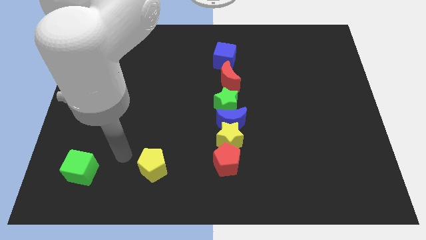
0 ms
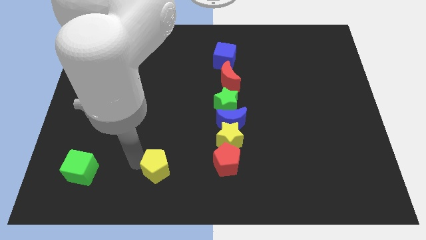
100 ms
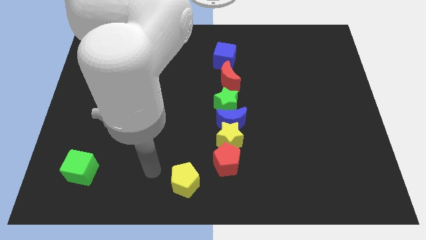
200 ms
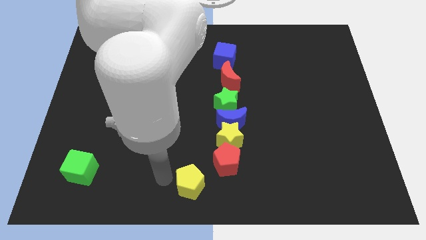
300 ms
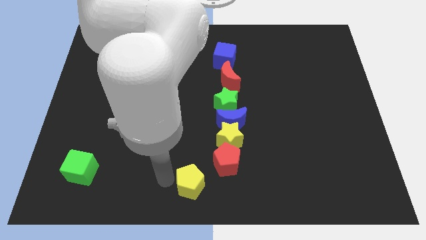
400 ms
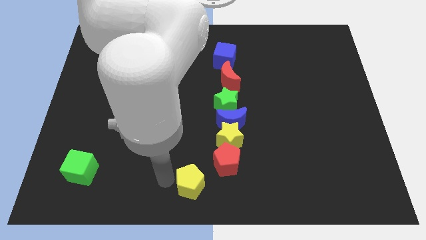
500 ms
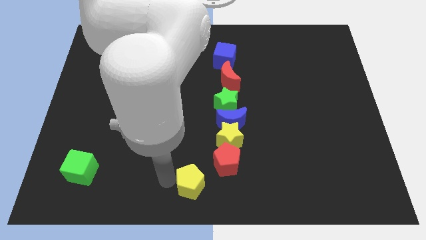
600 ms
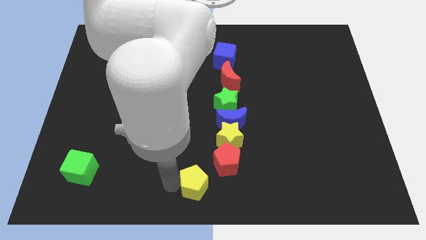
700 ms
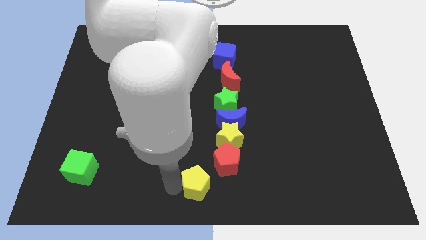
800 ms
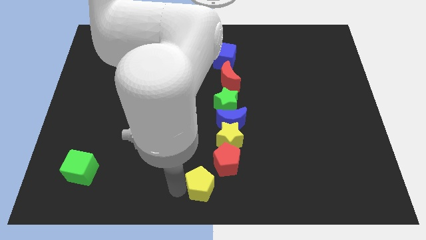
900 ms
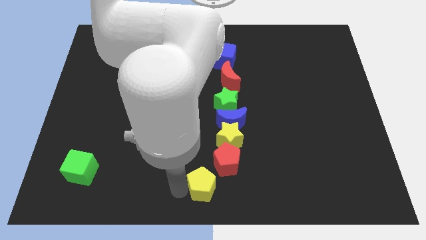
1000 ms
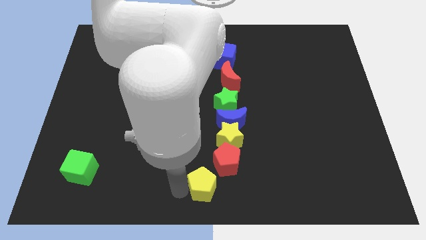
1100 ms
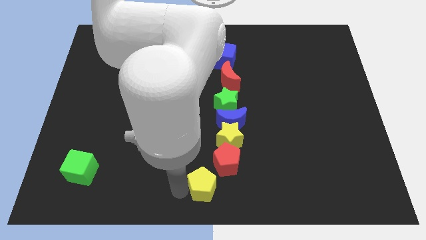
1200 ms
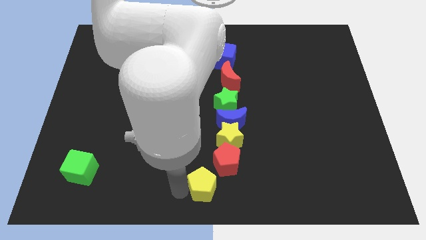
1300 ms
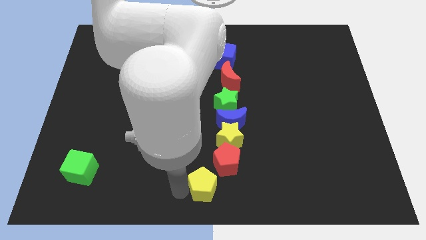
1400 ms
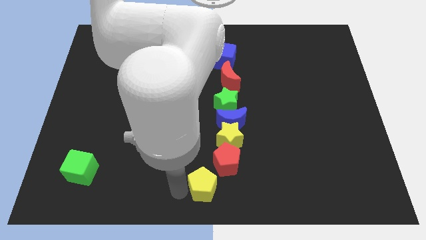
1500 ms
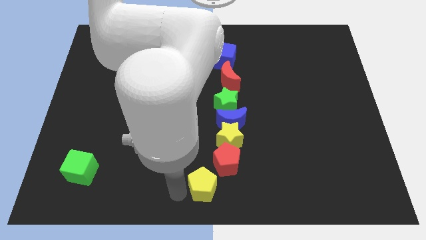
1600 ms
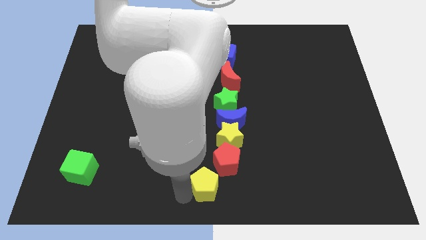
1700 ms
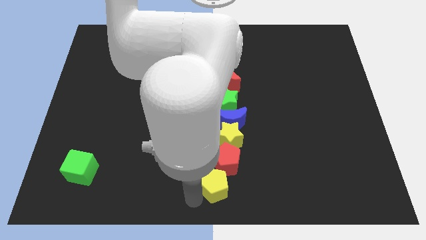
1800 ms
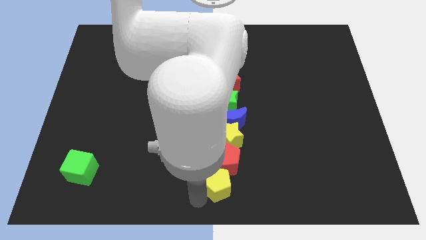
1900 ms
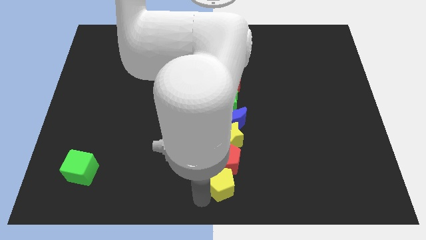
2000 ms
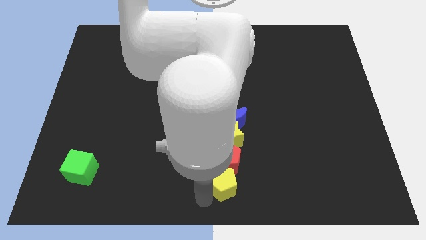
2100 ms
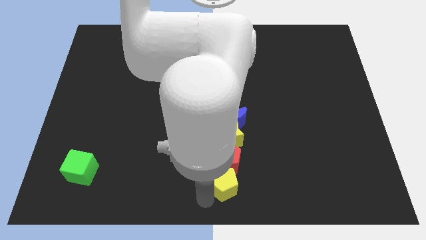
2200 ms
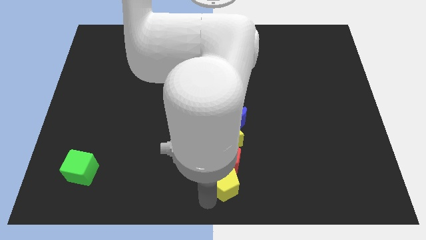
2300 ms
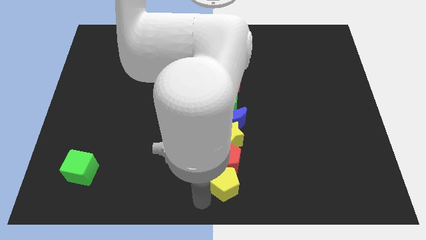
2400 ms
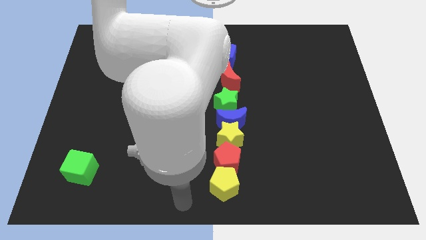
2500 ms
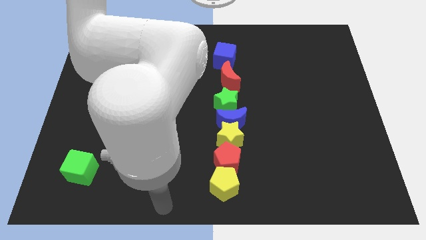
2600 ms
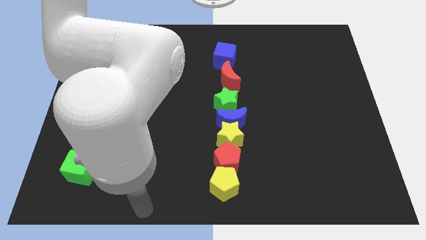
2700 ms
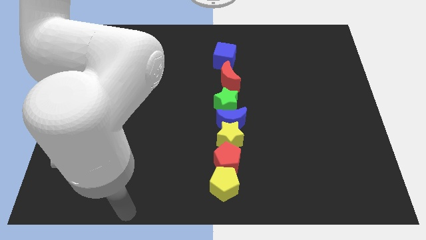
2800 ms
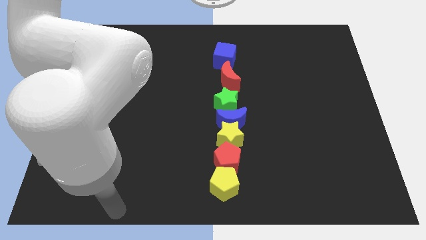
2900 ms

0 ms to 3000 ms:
put the yellow pentagon at the bottom center of the board

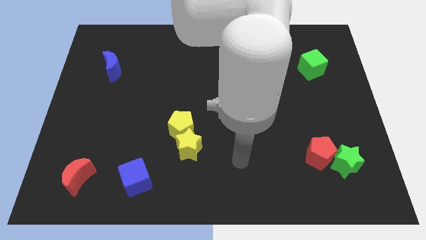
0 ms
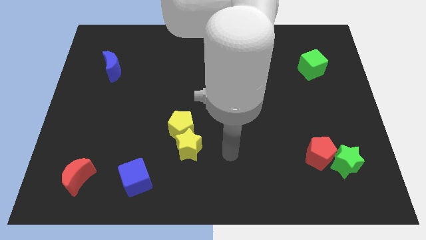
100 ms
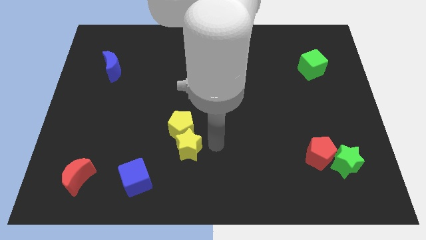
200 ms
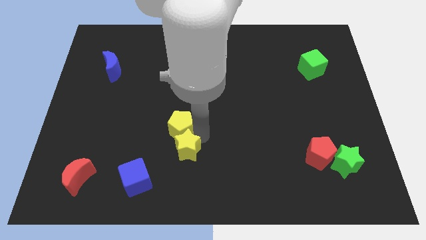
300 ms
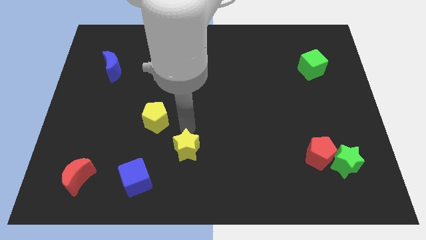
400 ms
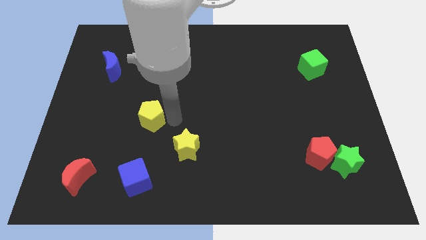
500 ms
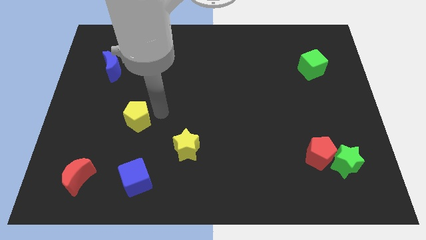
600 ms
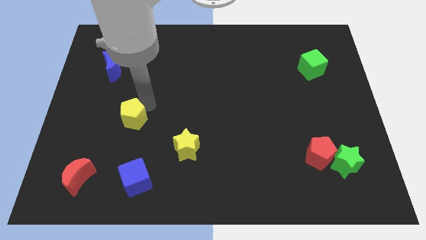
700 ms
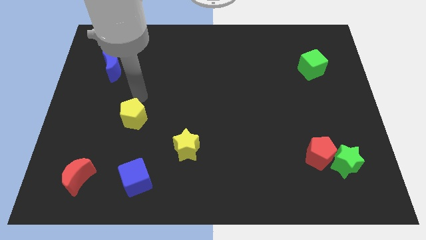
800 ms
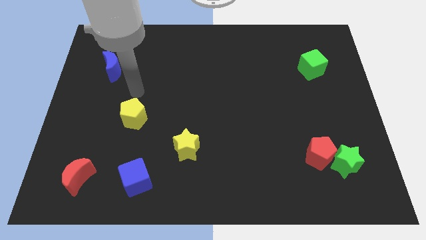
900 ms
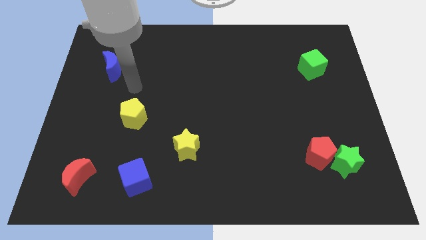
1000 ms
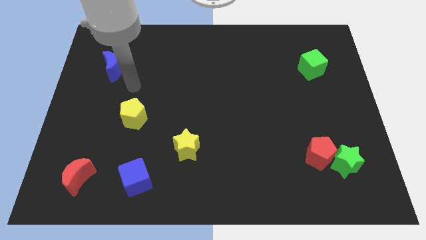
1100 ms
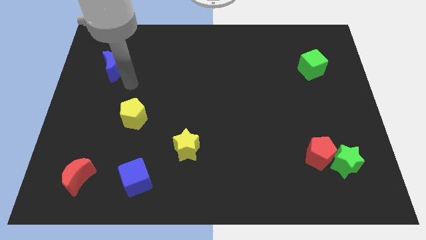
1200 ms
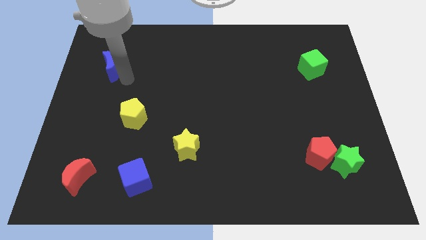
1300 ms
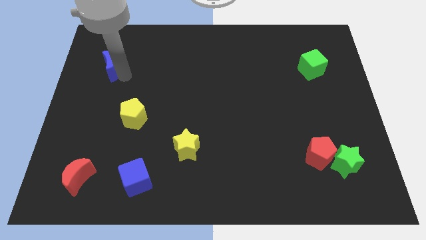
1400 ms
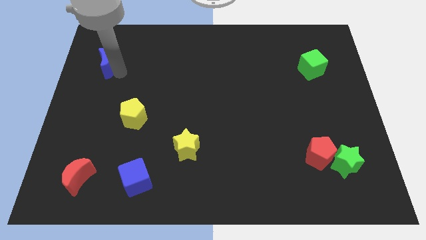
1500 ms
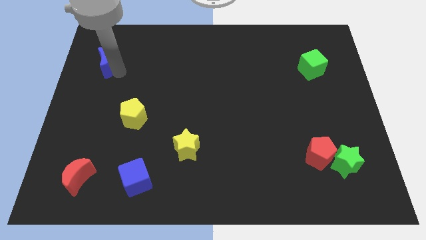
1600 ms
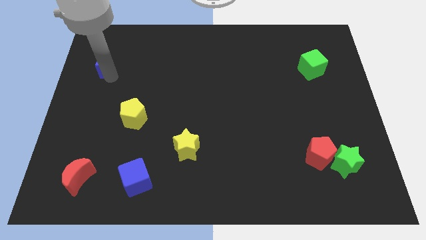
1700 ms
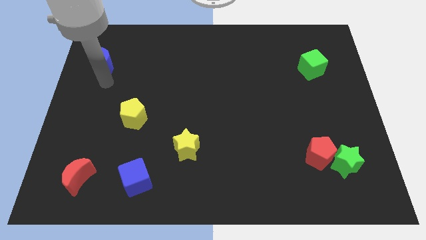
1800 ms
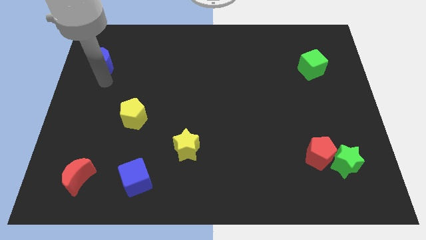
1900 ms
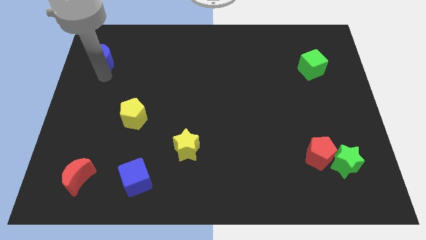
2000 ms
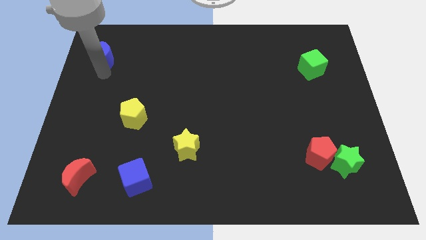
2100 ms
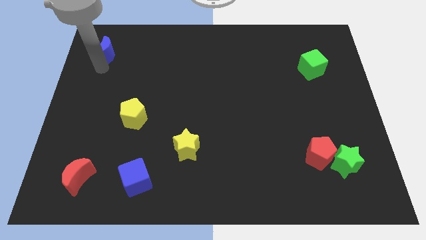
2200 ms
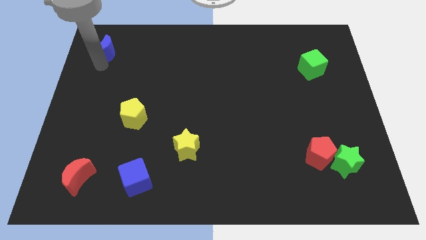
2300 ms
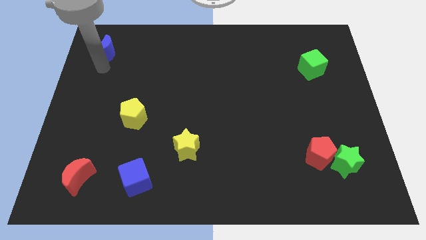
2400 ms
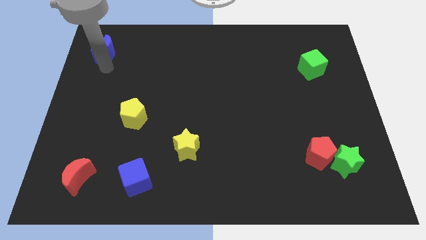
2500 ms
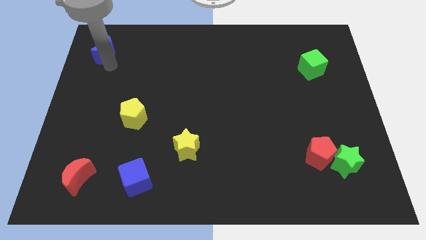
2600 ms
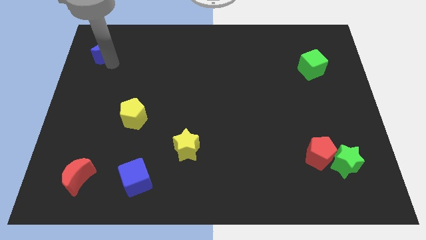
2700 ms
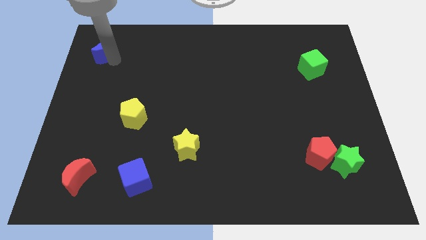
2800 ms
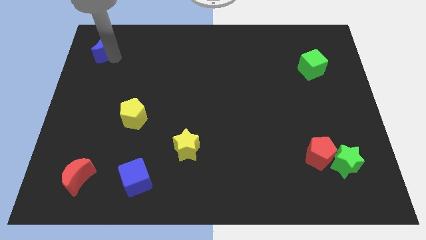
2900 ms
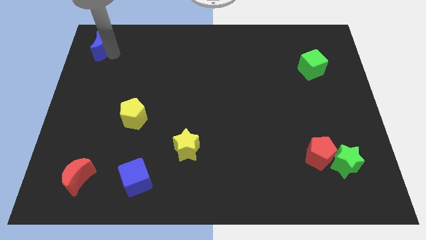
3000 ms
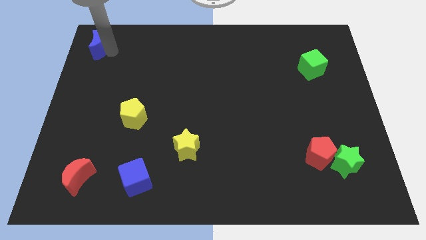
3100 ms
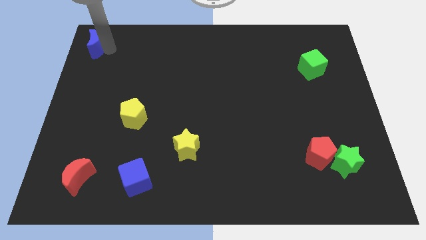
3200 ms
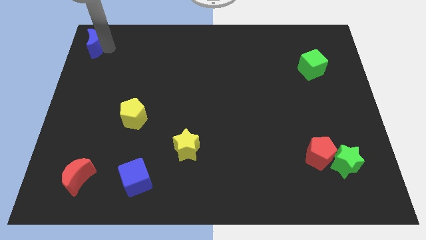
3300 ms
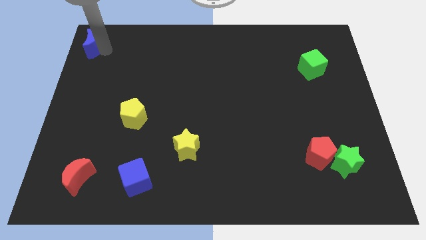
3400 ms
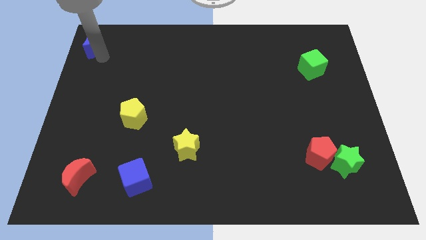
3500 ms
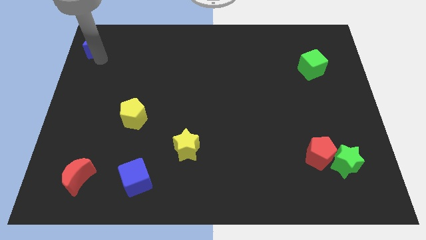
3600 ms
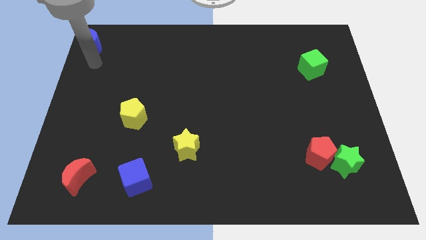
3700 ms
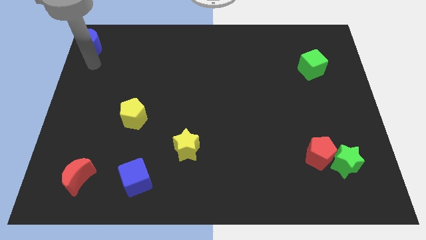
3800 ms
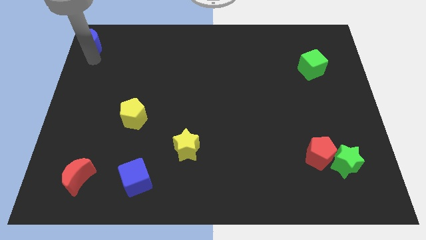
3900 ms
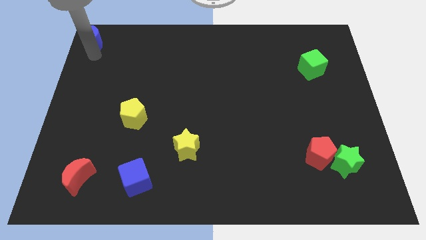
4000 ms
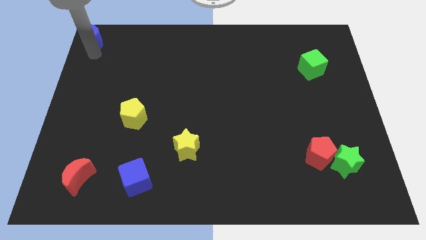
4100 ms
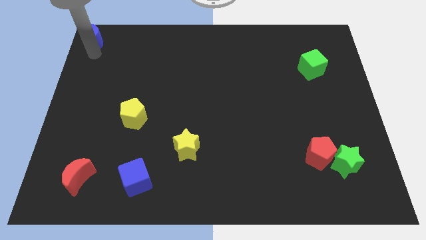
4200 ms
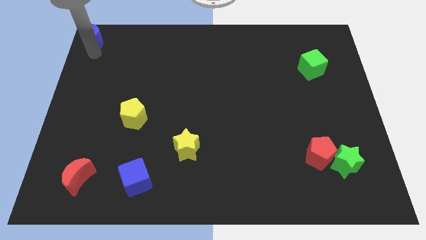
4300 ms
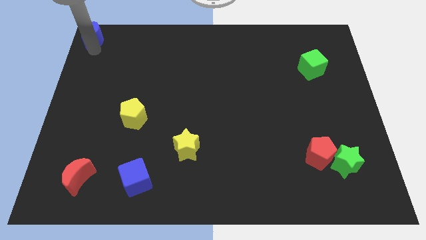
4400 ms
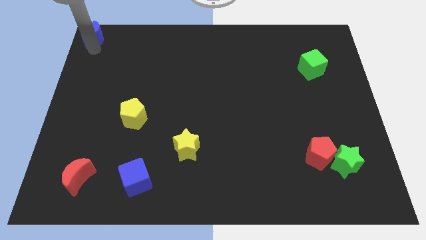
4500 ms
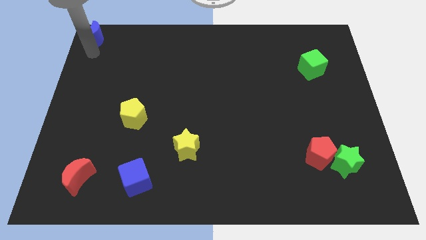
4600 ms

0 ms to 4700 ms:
move blue moon towards top left corner of the board

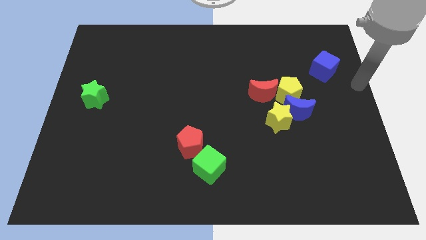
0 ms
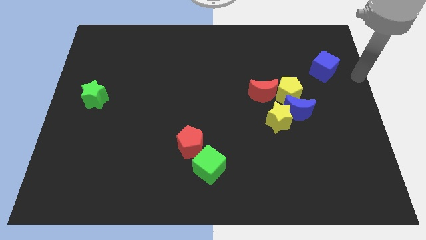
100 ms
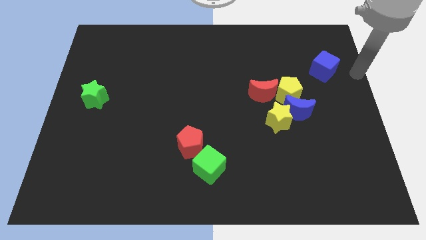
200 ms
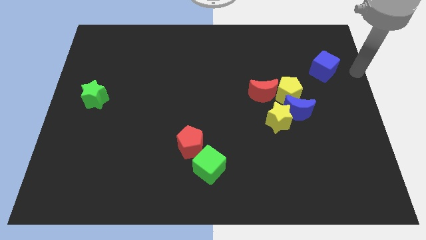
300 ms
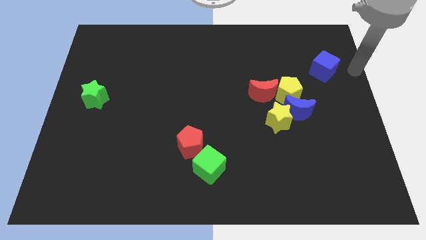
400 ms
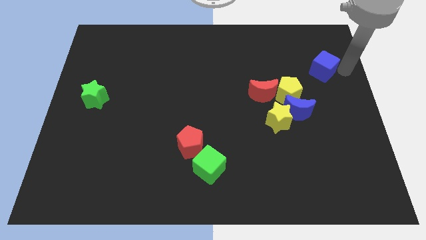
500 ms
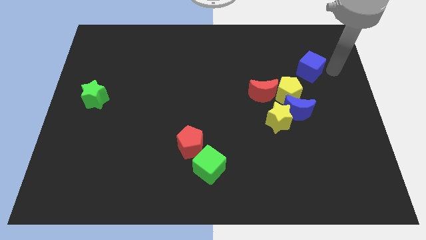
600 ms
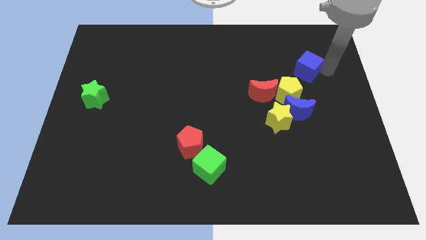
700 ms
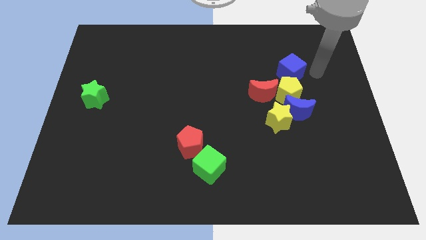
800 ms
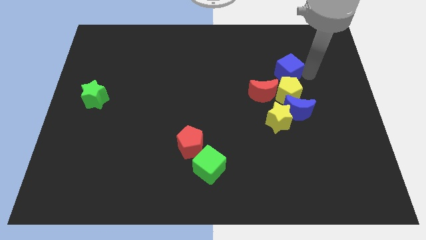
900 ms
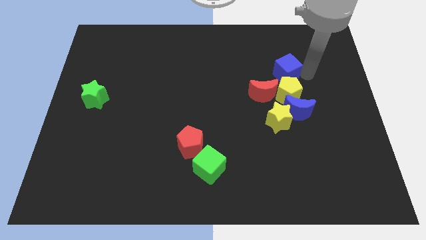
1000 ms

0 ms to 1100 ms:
place blue cube to the top of yellow pentagon
